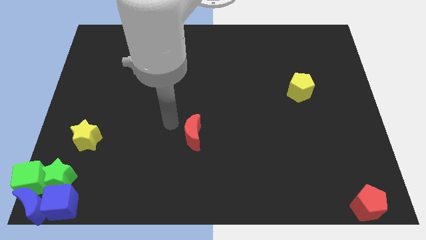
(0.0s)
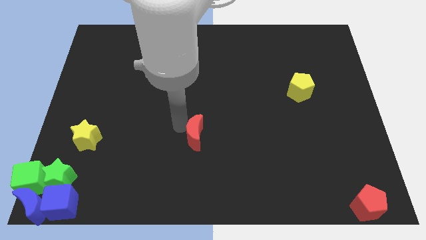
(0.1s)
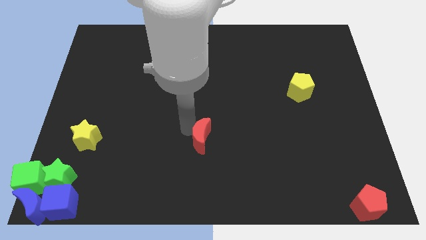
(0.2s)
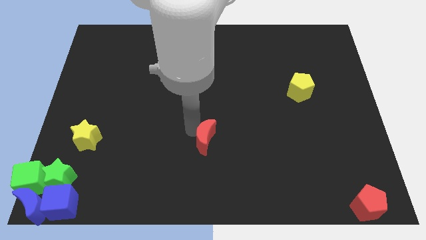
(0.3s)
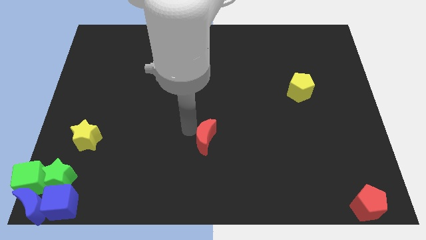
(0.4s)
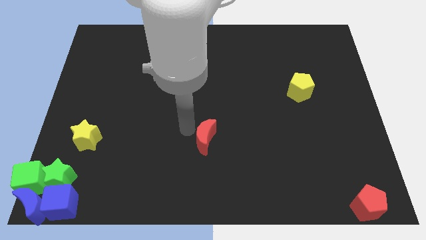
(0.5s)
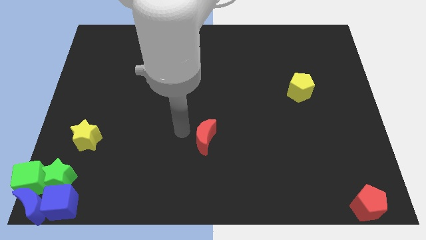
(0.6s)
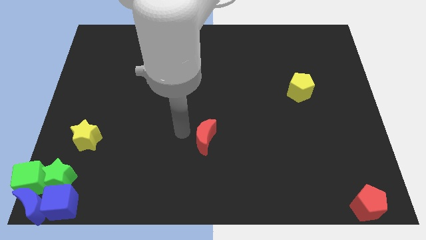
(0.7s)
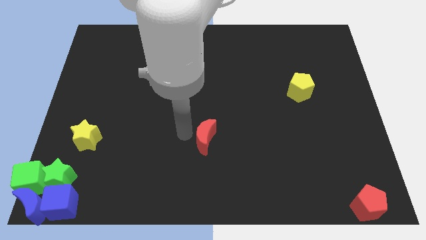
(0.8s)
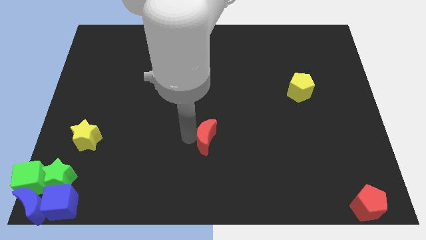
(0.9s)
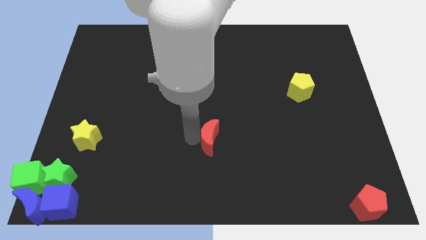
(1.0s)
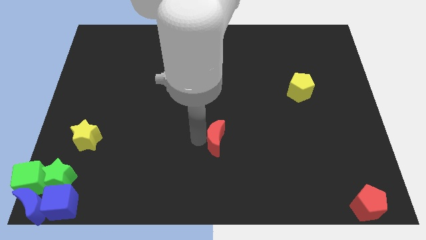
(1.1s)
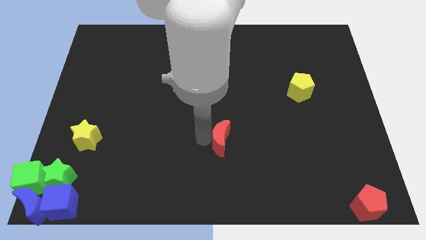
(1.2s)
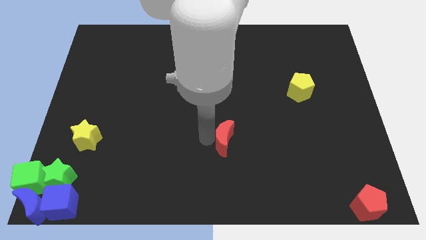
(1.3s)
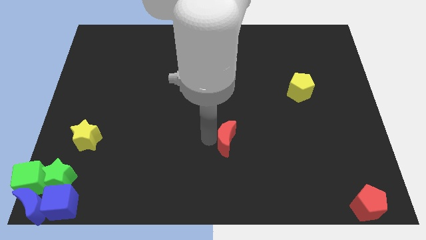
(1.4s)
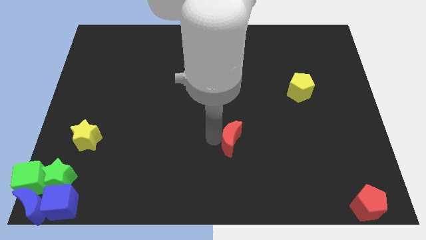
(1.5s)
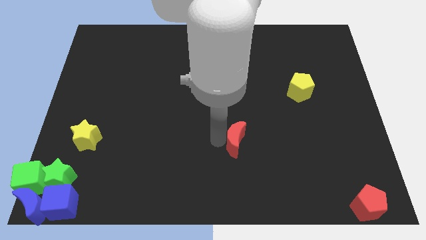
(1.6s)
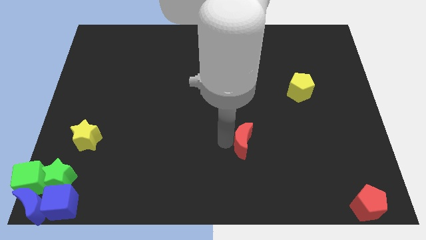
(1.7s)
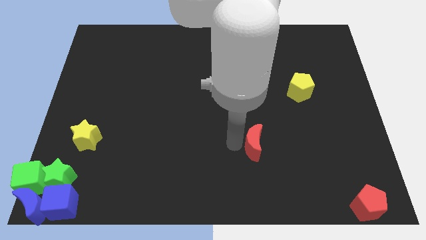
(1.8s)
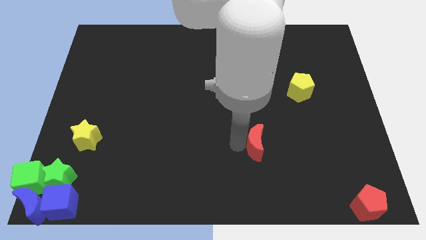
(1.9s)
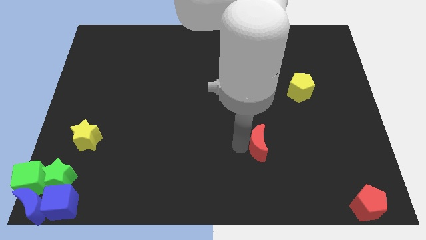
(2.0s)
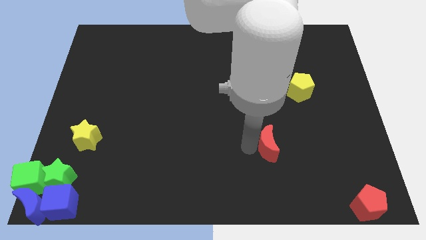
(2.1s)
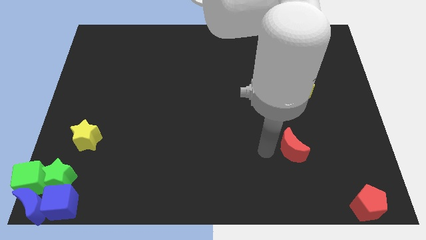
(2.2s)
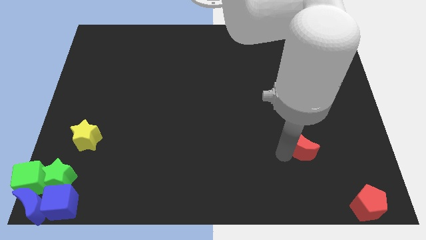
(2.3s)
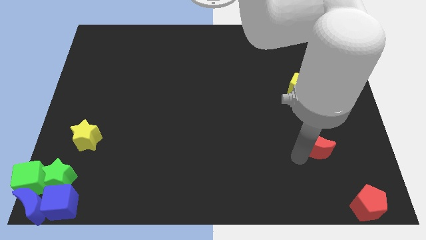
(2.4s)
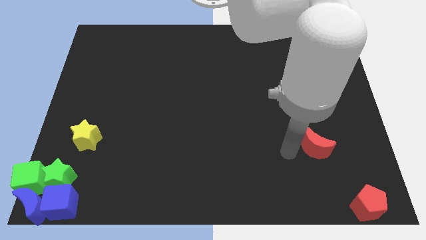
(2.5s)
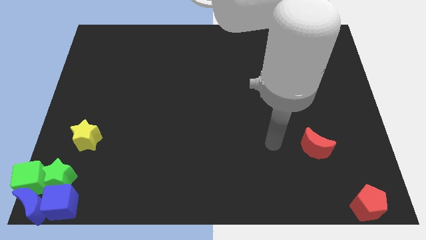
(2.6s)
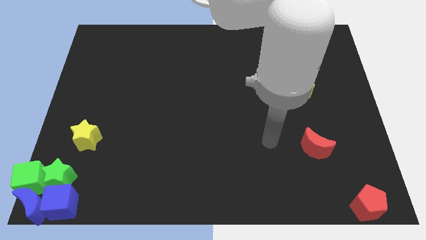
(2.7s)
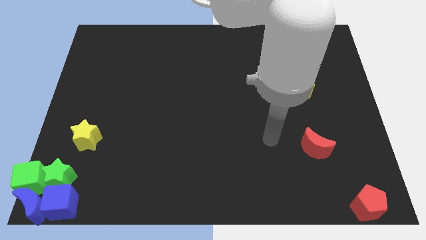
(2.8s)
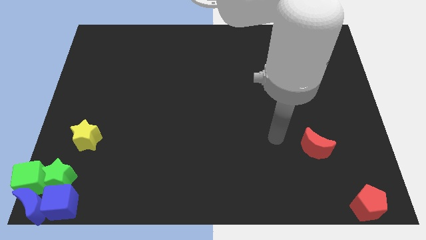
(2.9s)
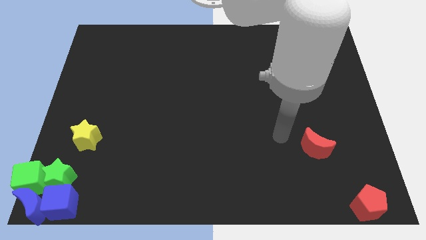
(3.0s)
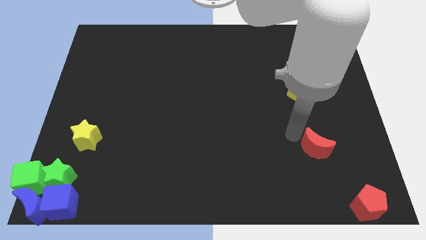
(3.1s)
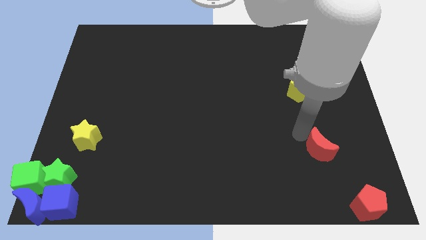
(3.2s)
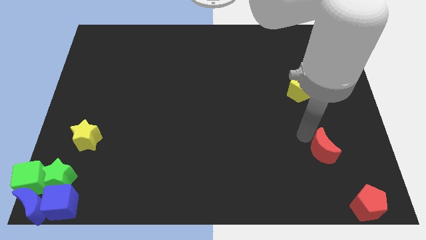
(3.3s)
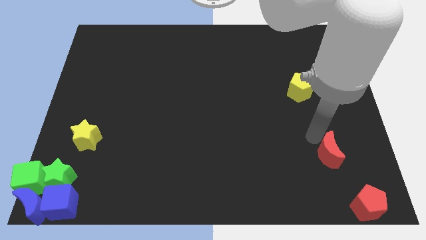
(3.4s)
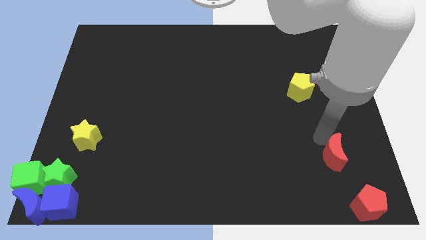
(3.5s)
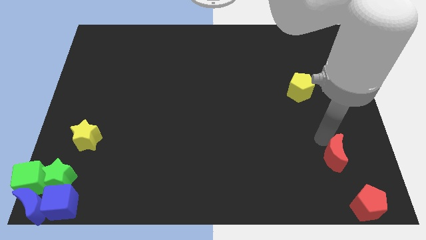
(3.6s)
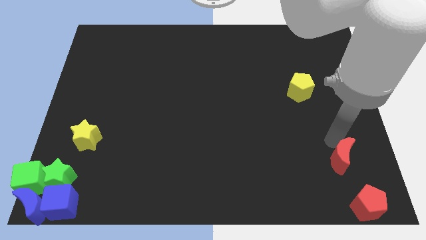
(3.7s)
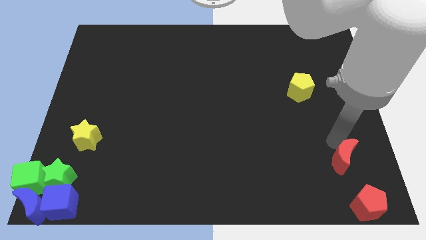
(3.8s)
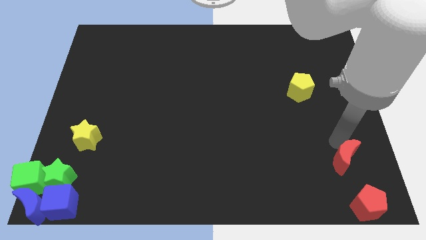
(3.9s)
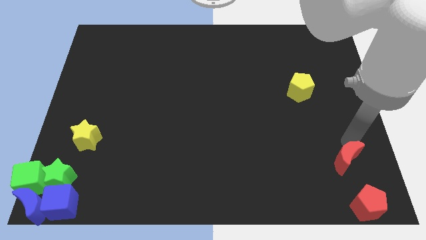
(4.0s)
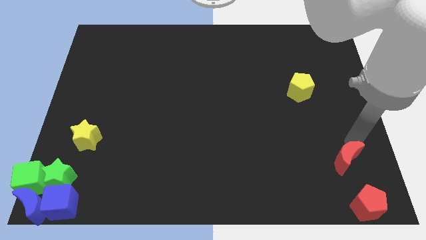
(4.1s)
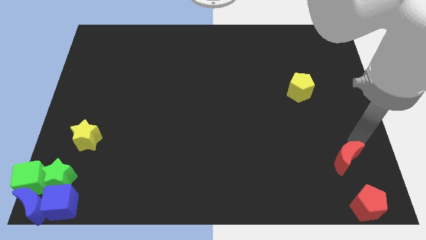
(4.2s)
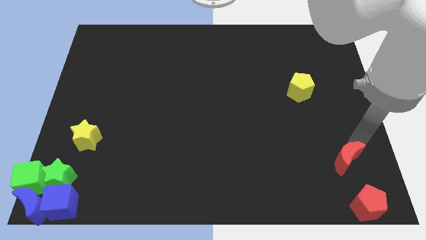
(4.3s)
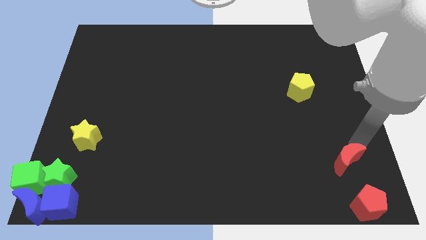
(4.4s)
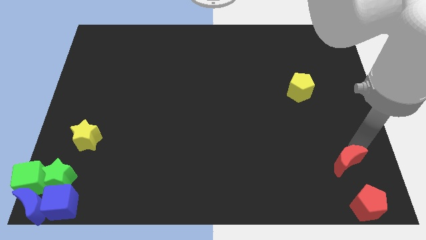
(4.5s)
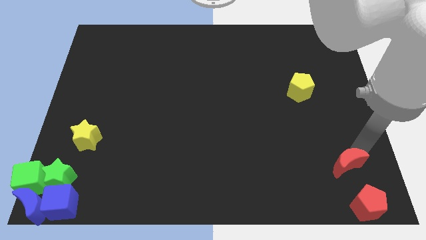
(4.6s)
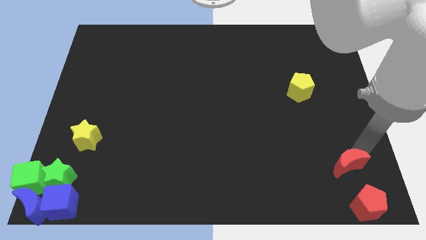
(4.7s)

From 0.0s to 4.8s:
move the red crescent above the red pentagon

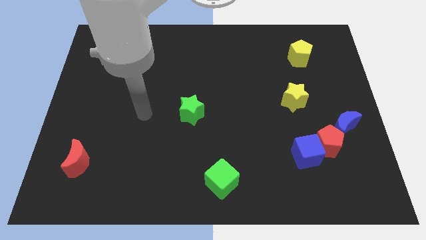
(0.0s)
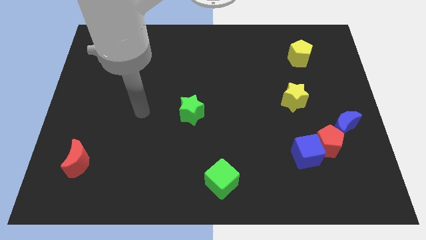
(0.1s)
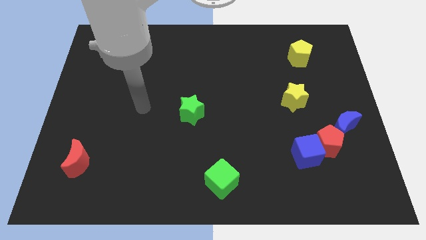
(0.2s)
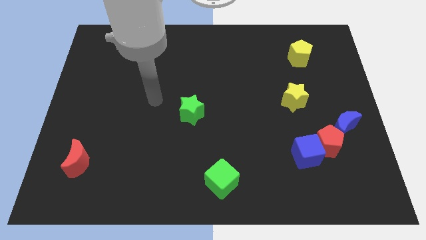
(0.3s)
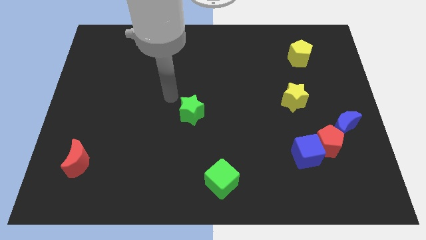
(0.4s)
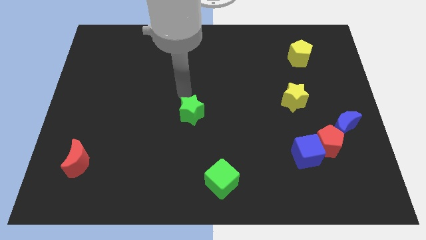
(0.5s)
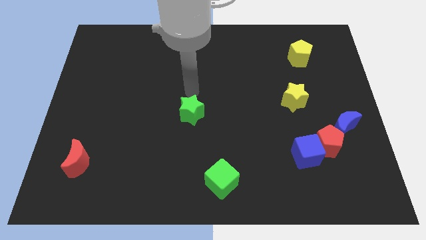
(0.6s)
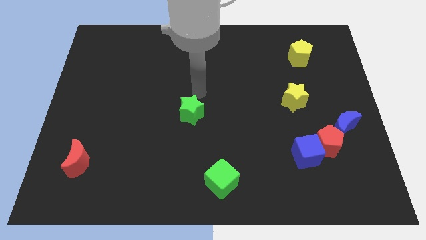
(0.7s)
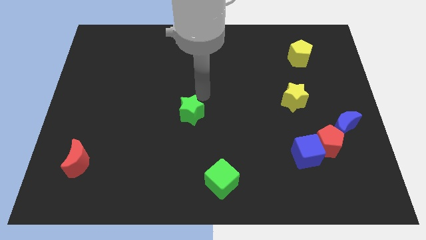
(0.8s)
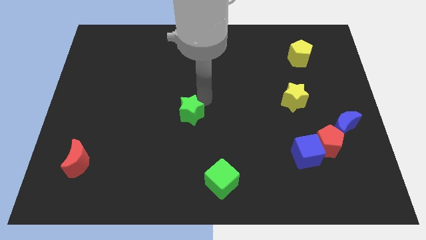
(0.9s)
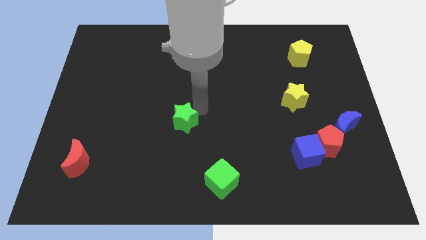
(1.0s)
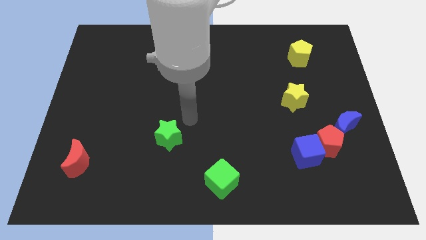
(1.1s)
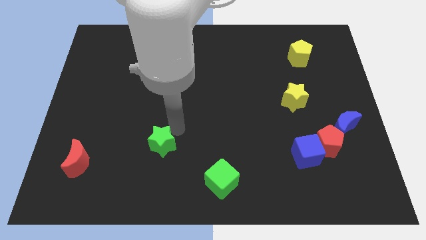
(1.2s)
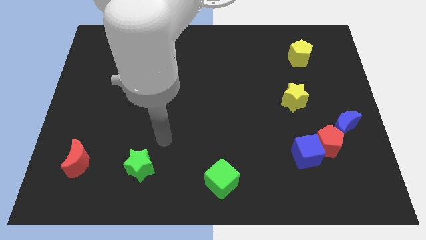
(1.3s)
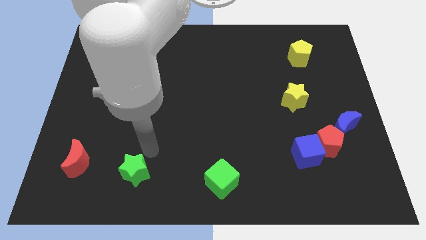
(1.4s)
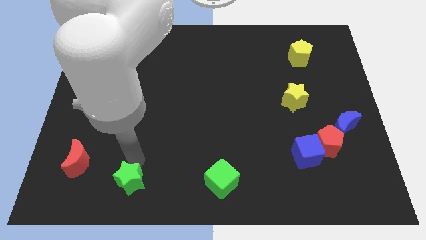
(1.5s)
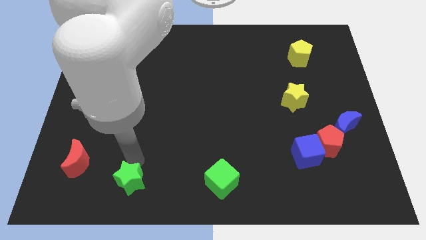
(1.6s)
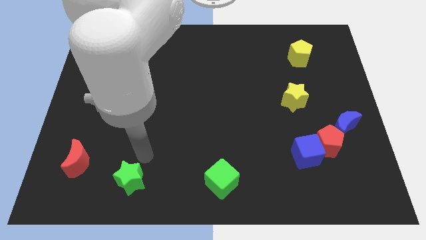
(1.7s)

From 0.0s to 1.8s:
move the green star to the bottom left

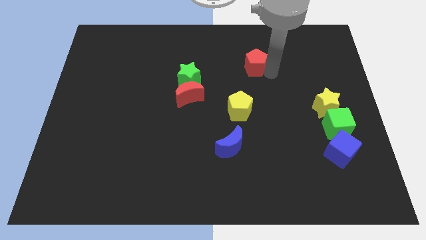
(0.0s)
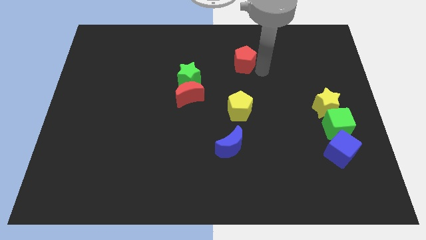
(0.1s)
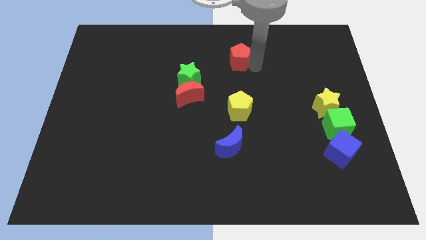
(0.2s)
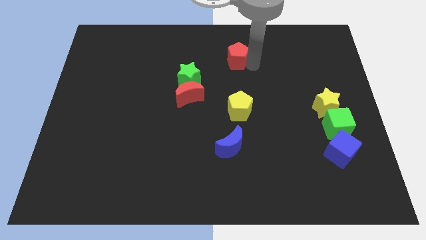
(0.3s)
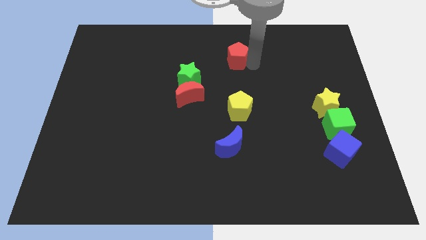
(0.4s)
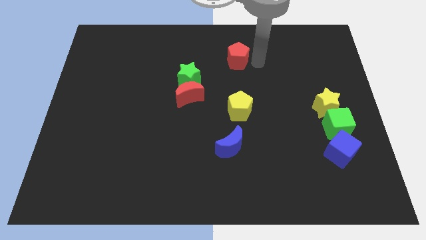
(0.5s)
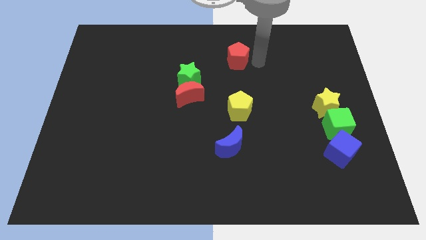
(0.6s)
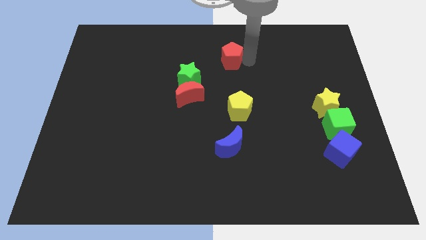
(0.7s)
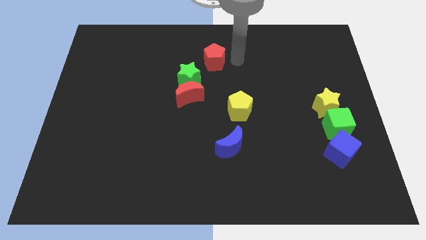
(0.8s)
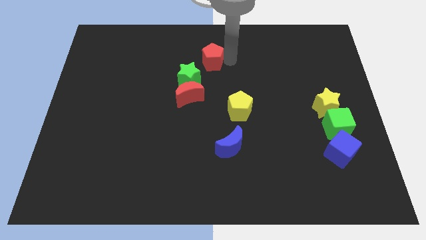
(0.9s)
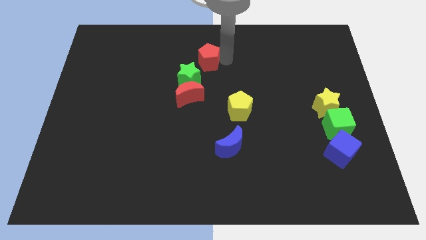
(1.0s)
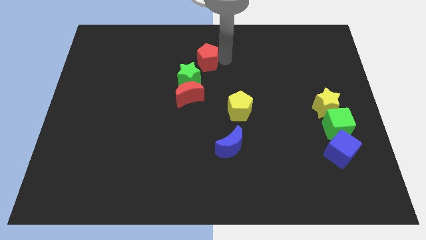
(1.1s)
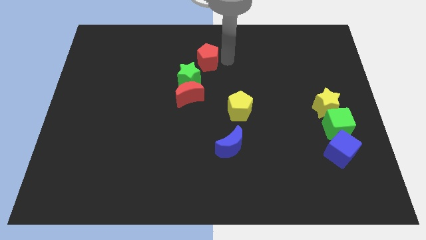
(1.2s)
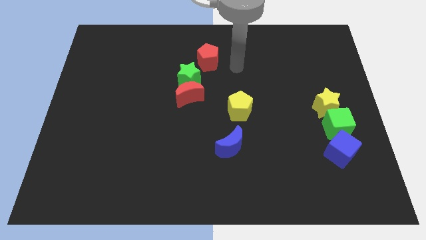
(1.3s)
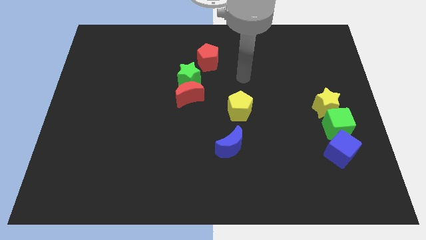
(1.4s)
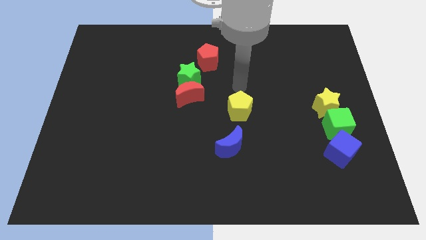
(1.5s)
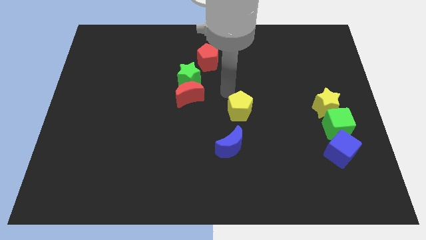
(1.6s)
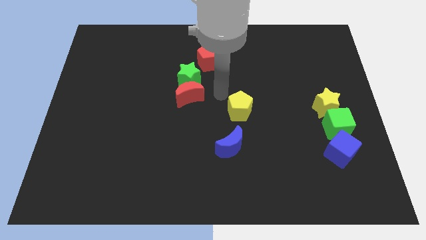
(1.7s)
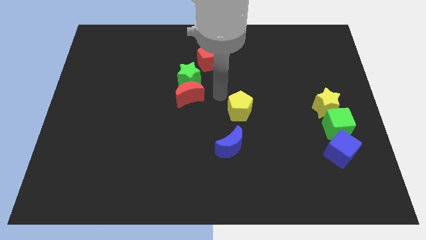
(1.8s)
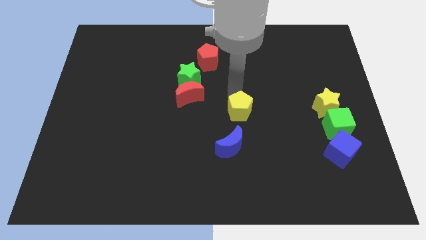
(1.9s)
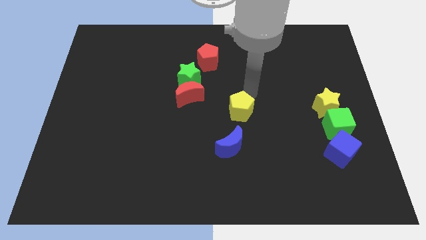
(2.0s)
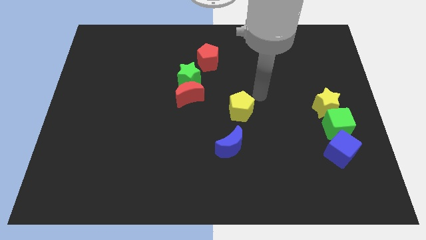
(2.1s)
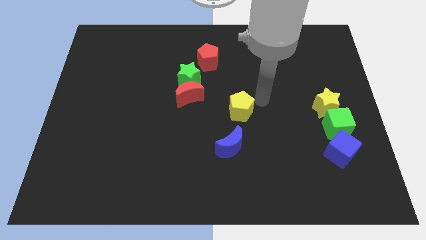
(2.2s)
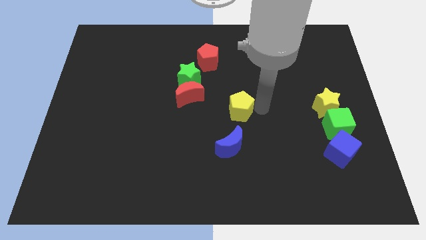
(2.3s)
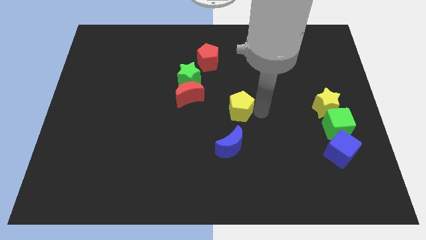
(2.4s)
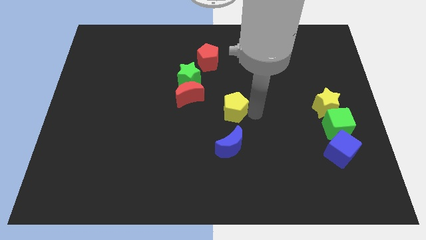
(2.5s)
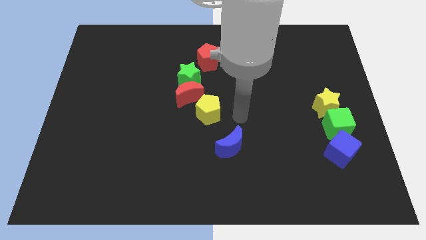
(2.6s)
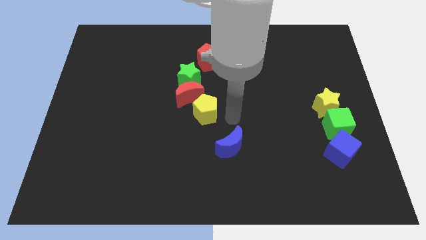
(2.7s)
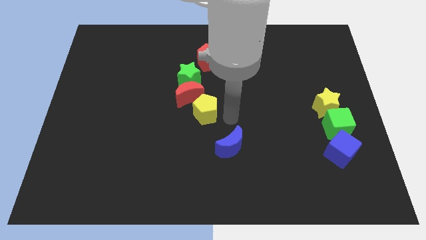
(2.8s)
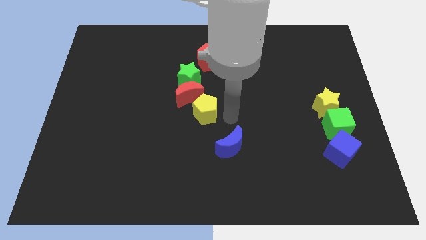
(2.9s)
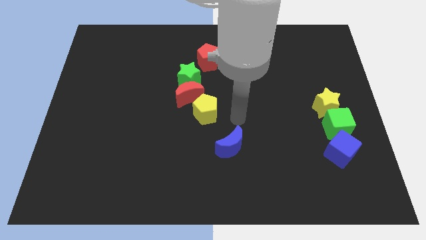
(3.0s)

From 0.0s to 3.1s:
slide the yellow pentagon close to the red crescent
